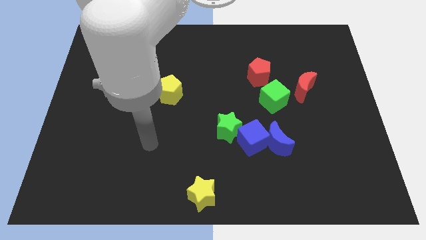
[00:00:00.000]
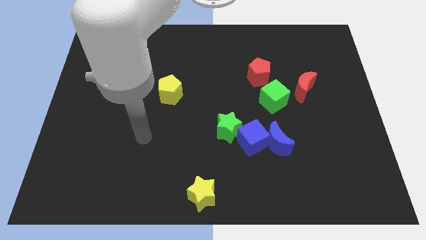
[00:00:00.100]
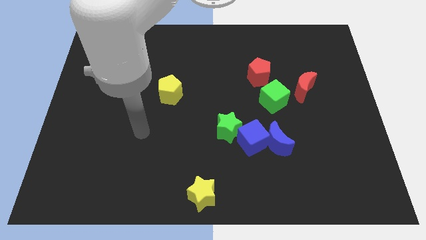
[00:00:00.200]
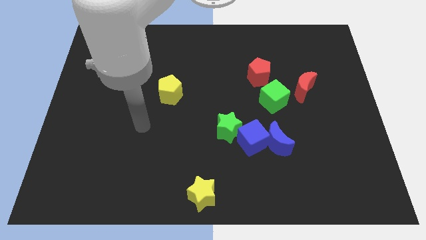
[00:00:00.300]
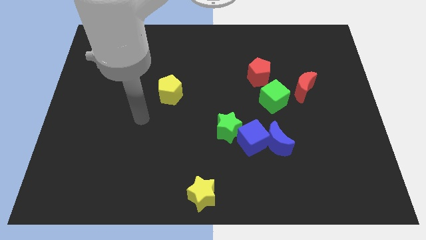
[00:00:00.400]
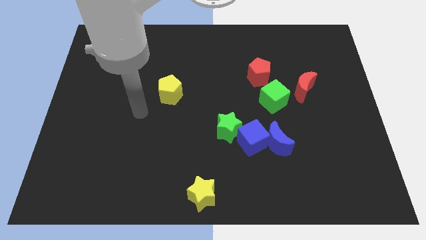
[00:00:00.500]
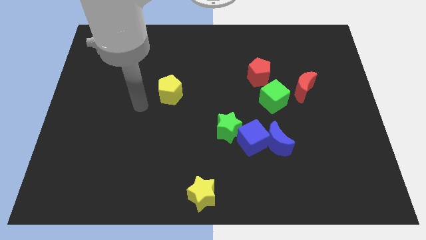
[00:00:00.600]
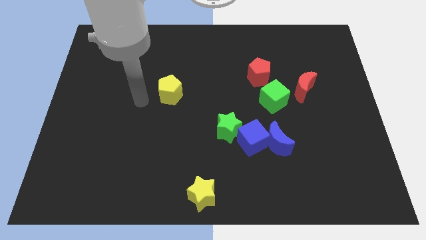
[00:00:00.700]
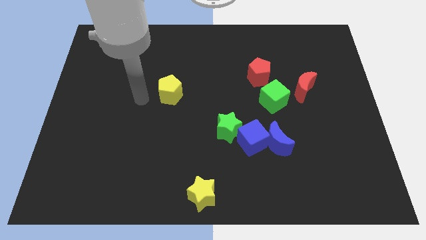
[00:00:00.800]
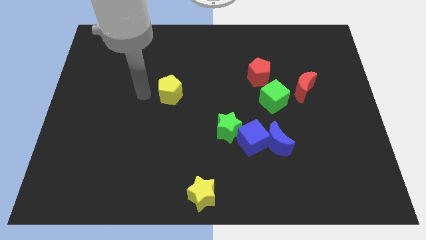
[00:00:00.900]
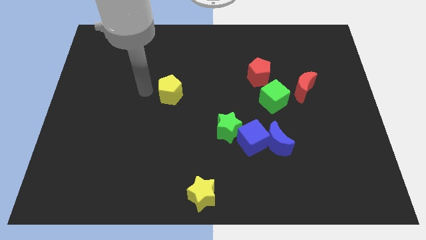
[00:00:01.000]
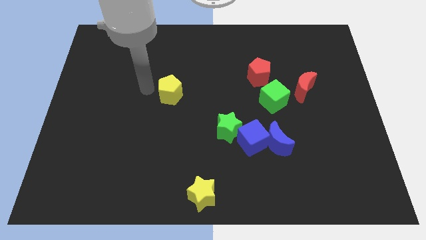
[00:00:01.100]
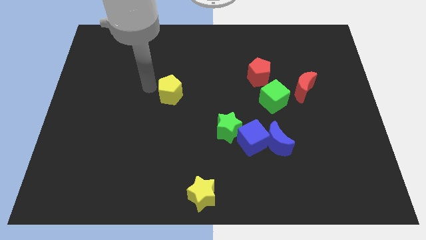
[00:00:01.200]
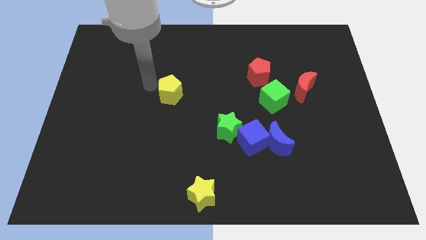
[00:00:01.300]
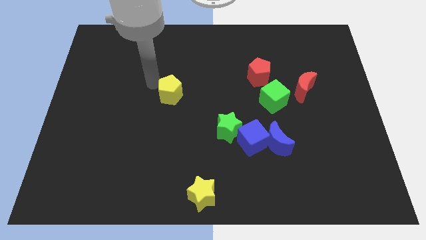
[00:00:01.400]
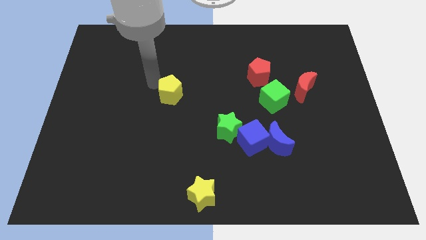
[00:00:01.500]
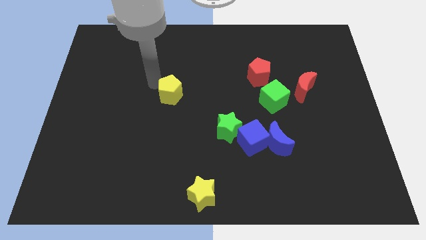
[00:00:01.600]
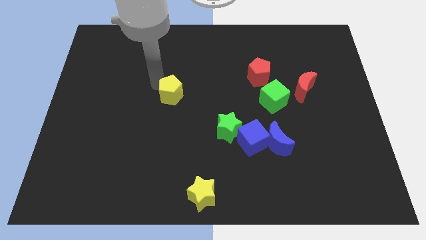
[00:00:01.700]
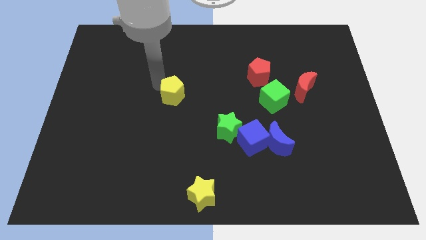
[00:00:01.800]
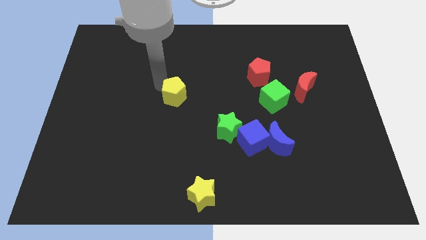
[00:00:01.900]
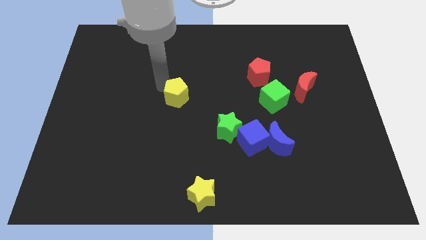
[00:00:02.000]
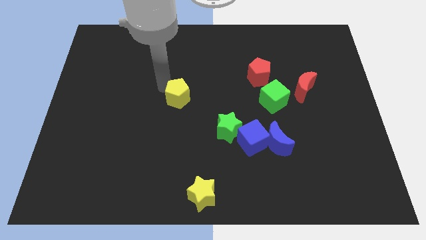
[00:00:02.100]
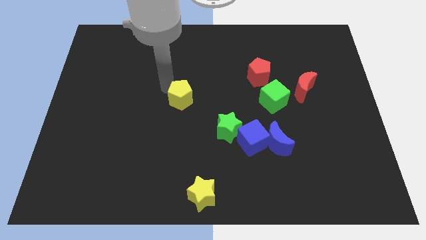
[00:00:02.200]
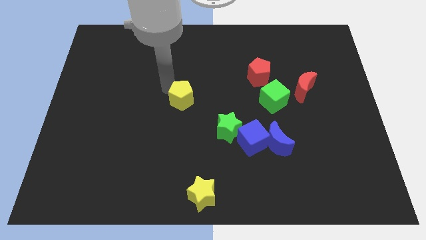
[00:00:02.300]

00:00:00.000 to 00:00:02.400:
push the yellow pentagon towards the green star

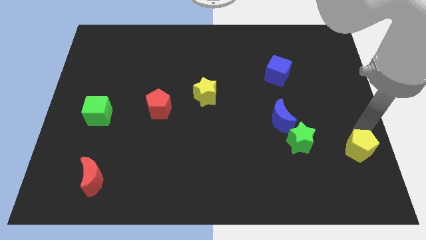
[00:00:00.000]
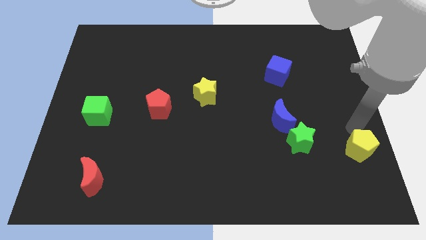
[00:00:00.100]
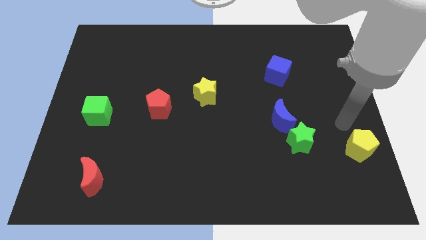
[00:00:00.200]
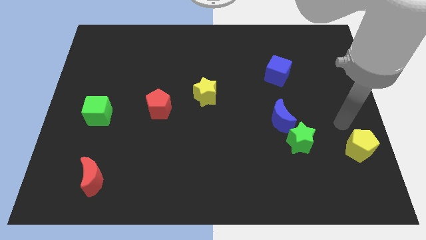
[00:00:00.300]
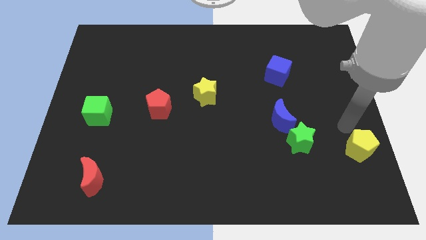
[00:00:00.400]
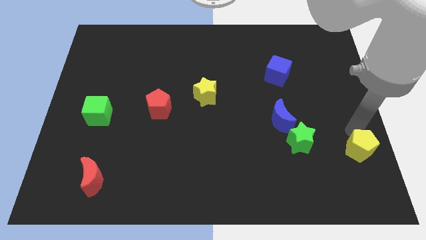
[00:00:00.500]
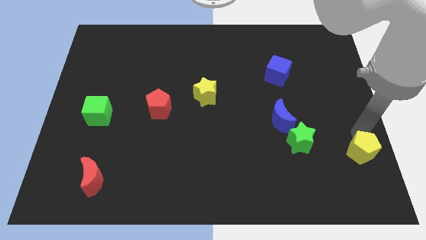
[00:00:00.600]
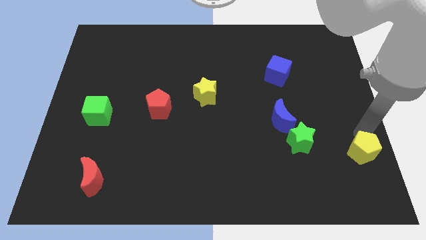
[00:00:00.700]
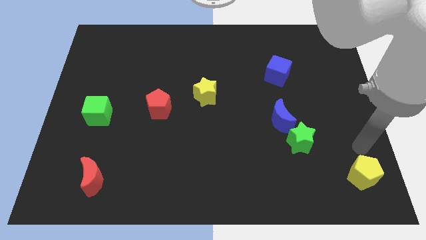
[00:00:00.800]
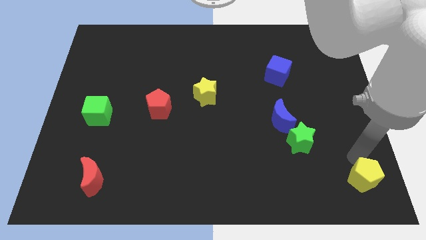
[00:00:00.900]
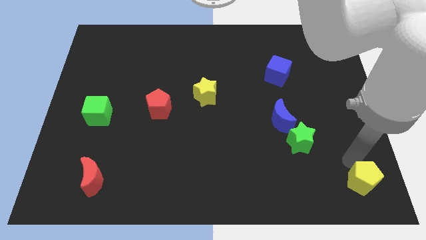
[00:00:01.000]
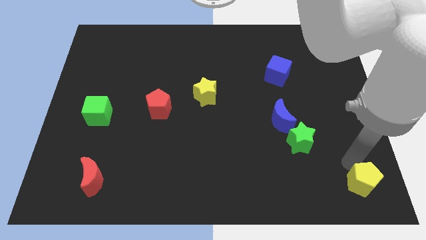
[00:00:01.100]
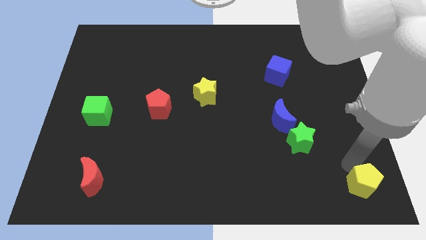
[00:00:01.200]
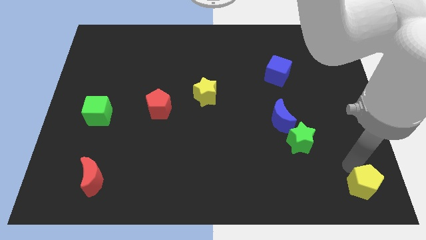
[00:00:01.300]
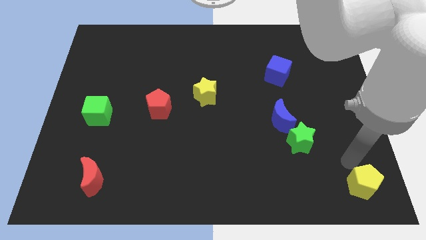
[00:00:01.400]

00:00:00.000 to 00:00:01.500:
push the yellow pentagon slightly downward

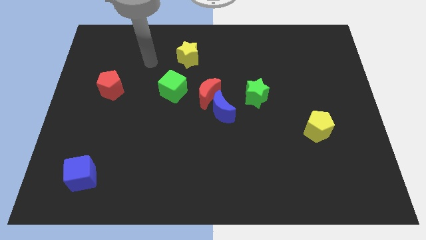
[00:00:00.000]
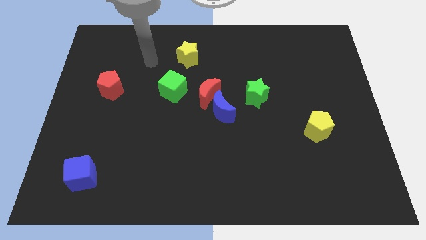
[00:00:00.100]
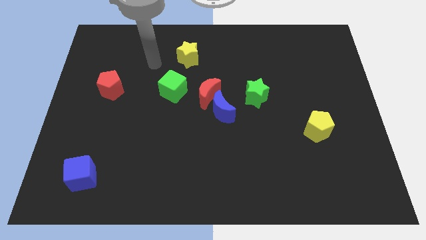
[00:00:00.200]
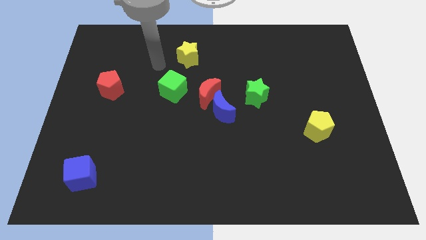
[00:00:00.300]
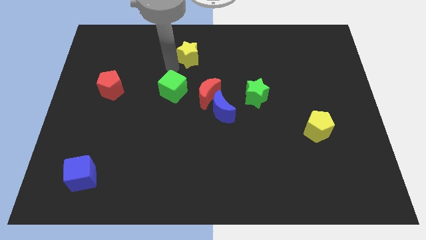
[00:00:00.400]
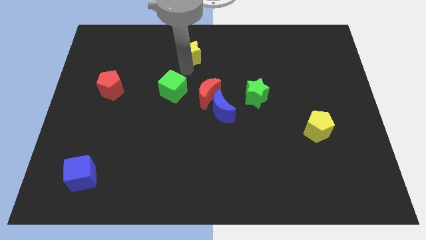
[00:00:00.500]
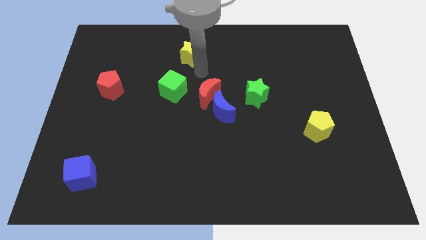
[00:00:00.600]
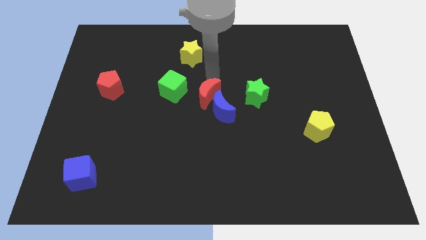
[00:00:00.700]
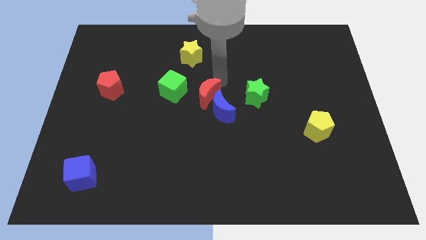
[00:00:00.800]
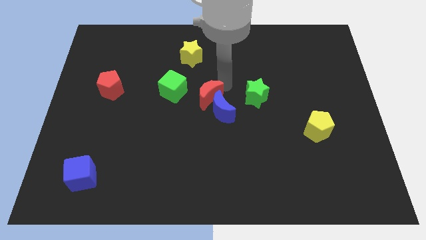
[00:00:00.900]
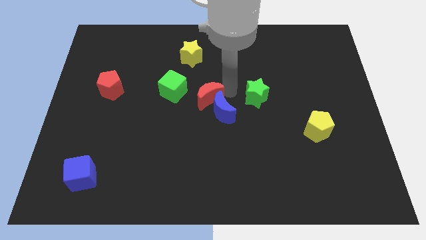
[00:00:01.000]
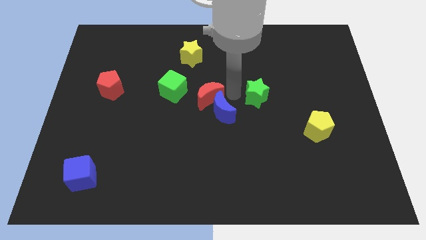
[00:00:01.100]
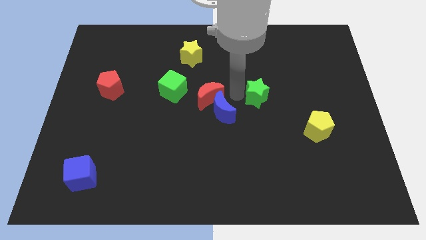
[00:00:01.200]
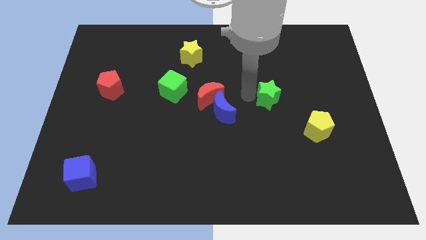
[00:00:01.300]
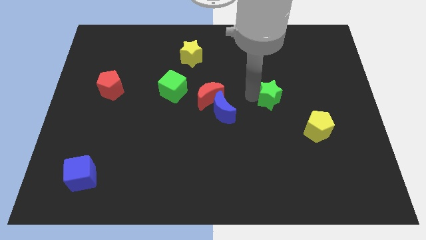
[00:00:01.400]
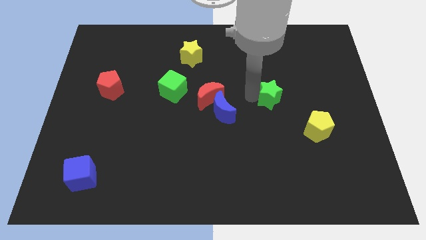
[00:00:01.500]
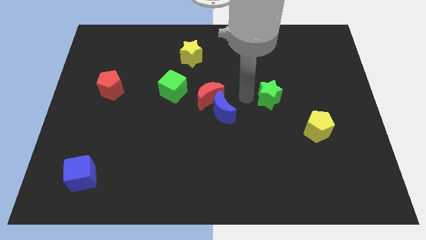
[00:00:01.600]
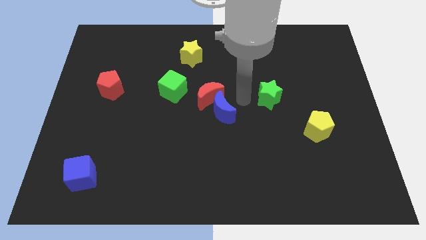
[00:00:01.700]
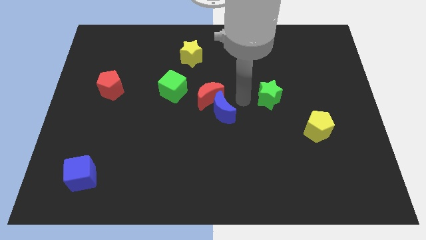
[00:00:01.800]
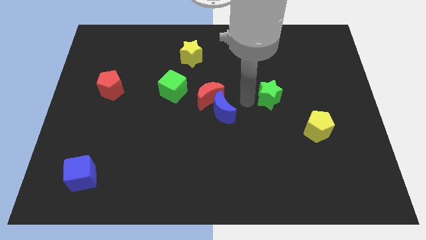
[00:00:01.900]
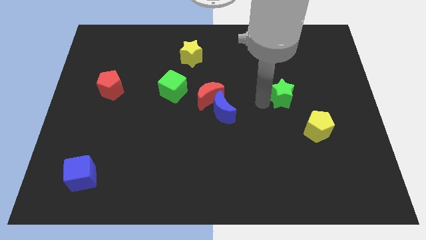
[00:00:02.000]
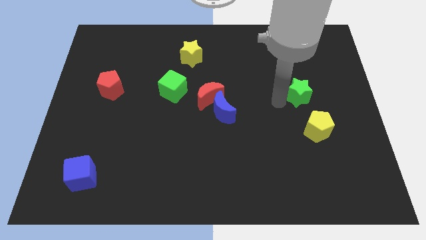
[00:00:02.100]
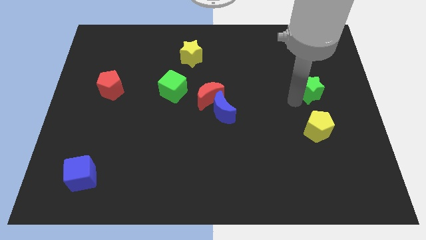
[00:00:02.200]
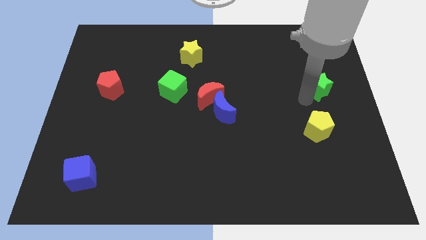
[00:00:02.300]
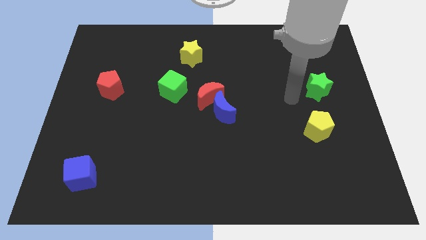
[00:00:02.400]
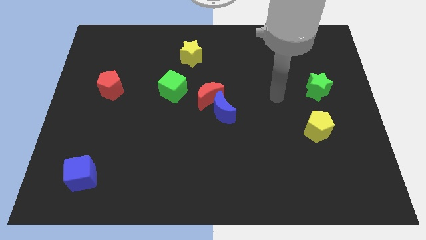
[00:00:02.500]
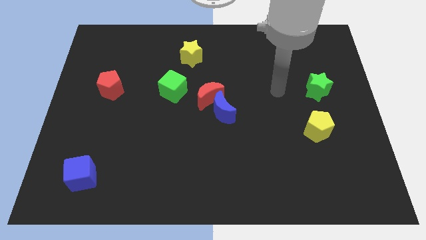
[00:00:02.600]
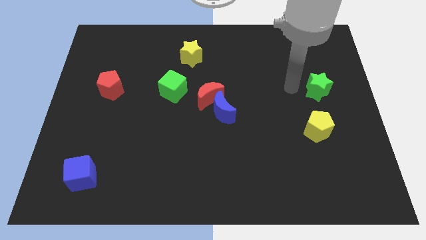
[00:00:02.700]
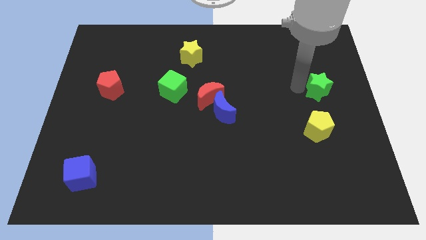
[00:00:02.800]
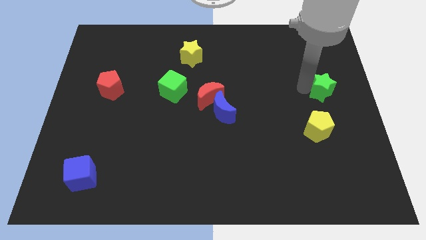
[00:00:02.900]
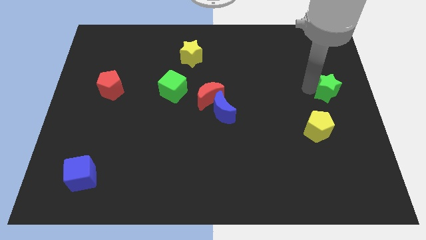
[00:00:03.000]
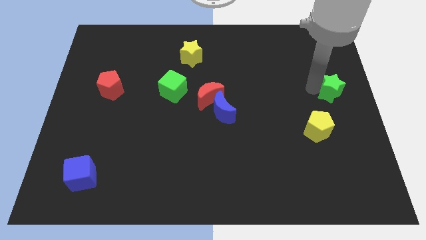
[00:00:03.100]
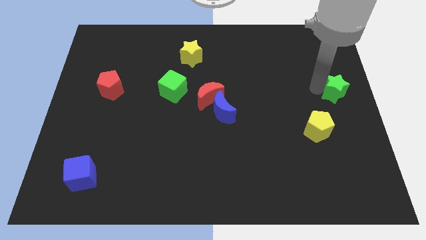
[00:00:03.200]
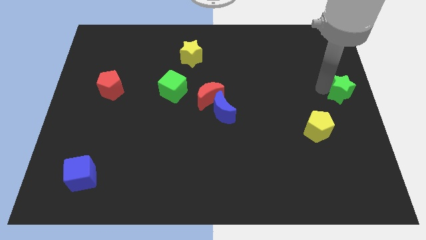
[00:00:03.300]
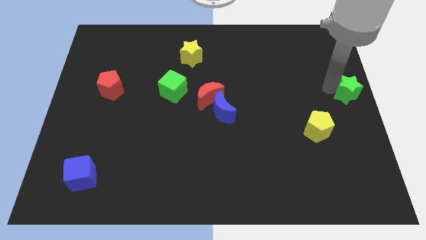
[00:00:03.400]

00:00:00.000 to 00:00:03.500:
move the green star to the center right of the board

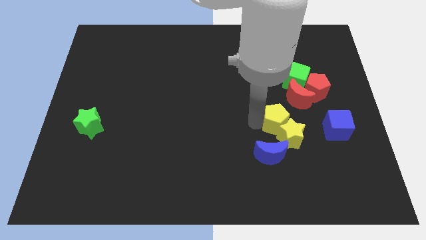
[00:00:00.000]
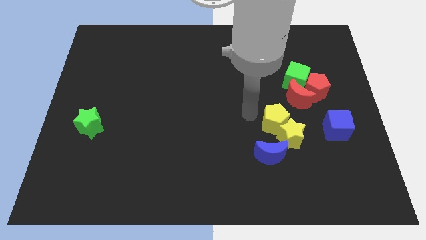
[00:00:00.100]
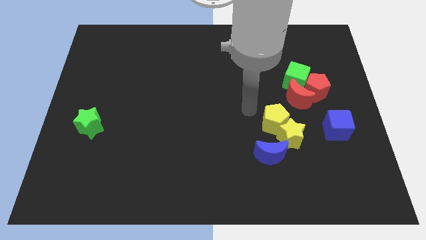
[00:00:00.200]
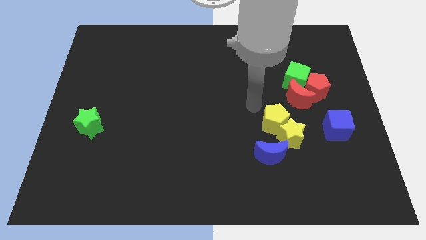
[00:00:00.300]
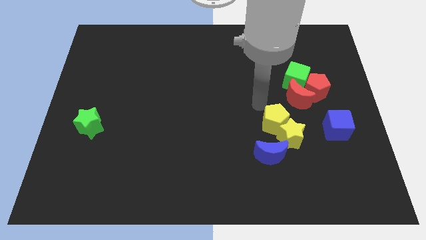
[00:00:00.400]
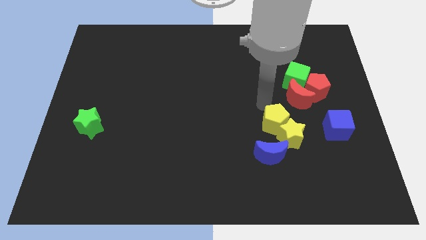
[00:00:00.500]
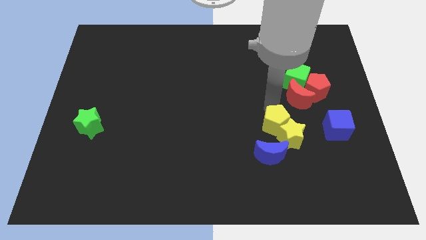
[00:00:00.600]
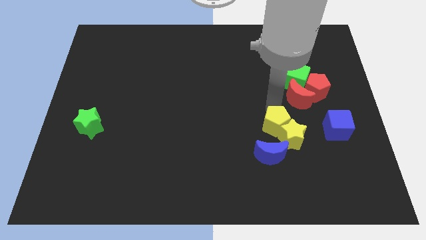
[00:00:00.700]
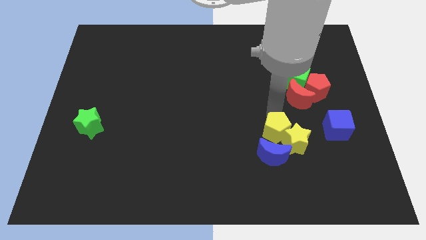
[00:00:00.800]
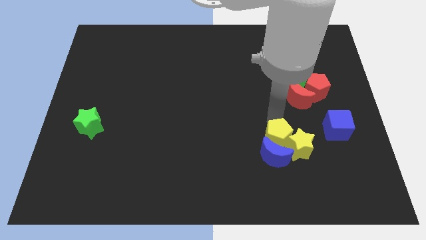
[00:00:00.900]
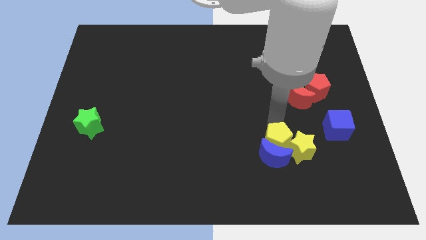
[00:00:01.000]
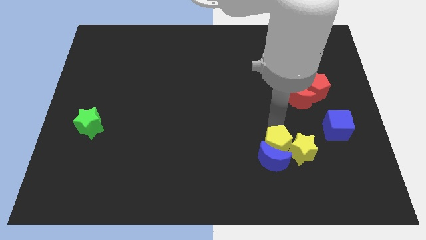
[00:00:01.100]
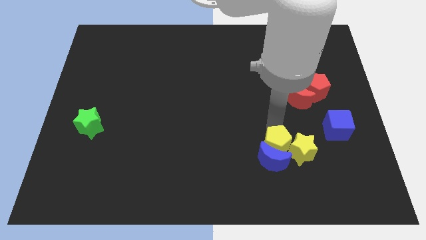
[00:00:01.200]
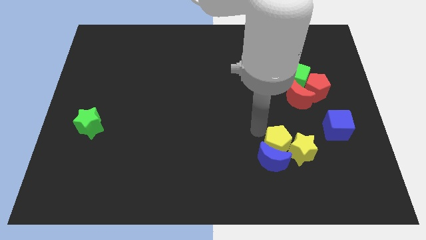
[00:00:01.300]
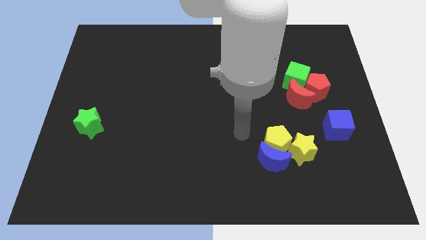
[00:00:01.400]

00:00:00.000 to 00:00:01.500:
push the yellow pentagon into the blue crescent
